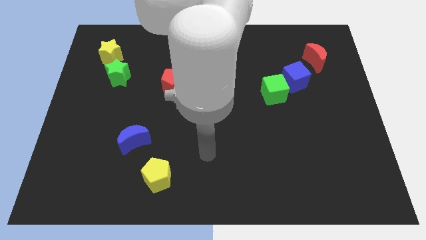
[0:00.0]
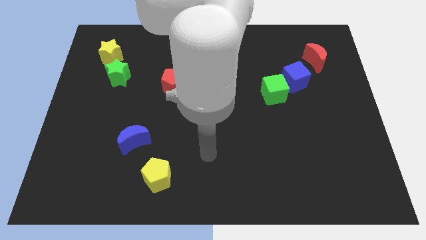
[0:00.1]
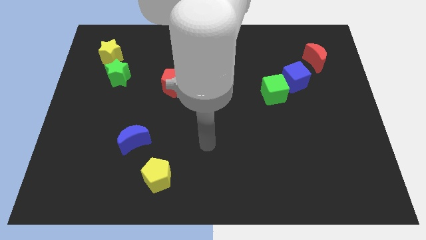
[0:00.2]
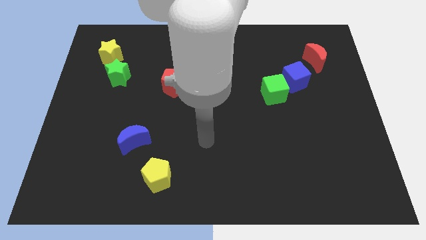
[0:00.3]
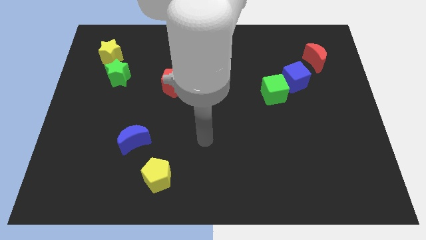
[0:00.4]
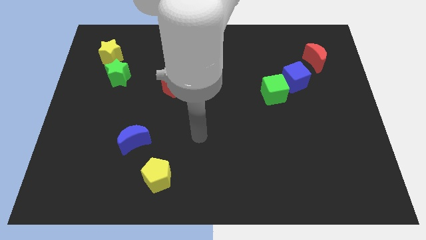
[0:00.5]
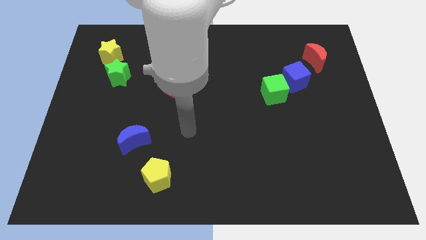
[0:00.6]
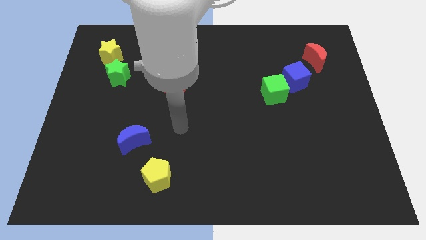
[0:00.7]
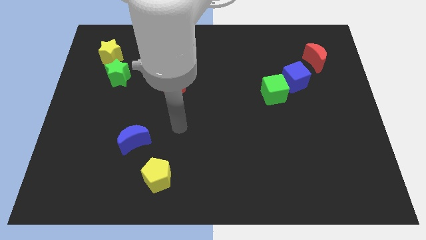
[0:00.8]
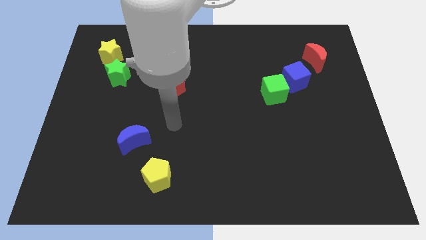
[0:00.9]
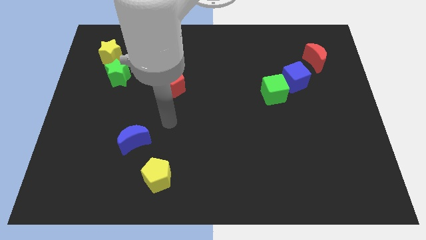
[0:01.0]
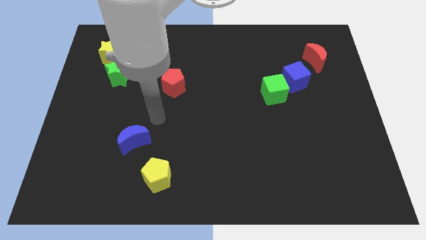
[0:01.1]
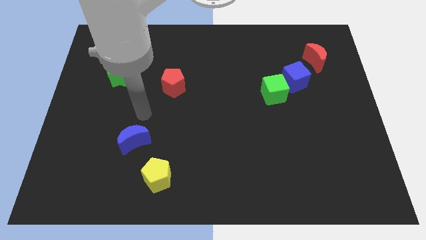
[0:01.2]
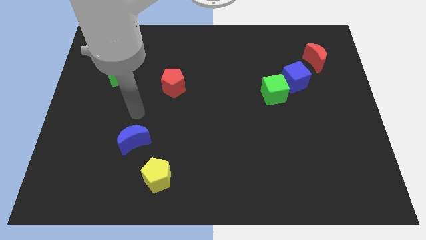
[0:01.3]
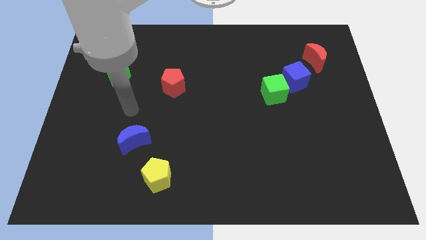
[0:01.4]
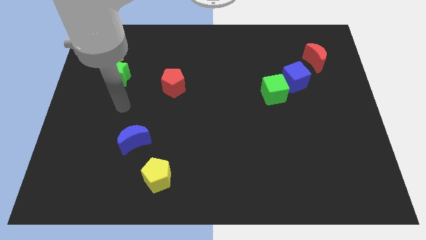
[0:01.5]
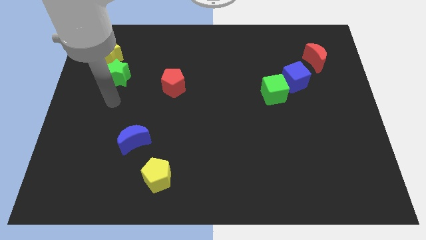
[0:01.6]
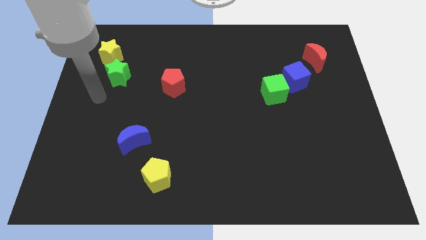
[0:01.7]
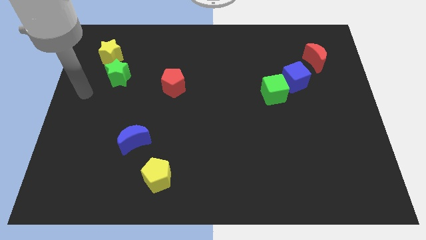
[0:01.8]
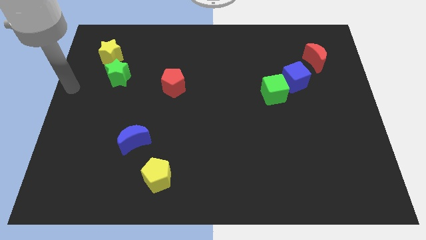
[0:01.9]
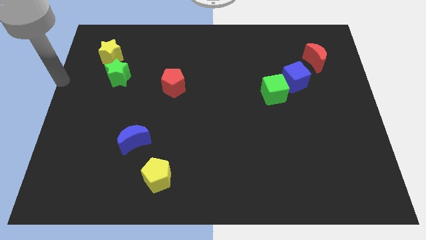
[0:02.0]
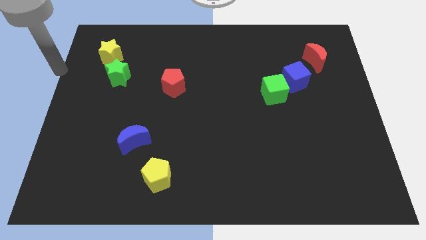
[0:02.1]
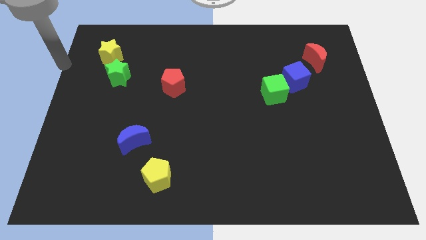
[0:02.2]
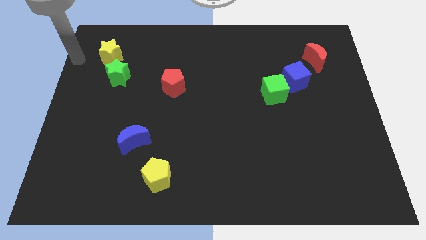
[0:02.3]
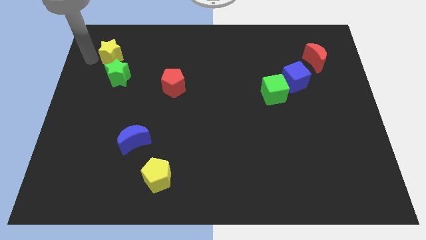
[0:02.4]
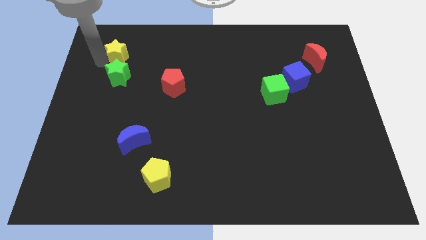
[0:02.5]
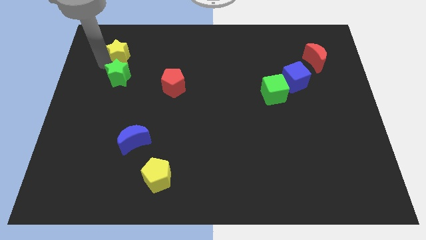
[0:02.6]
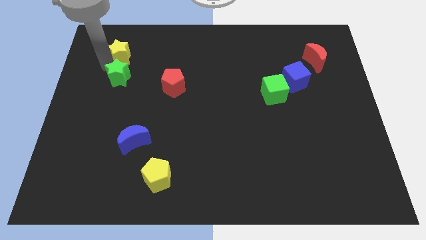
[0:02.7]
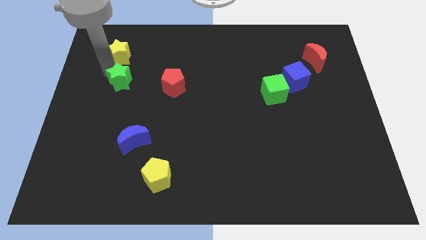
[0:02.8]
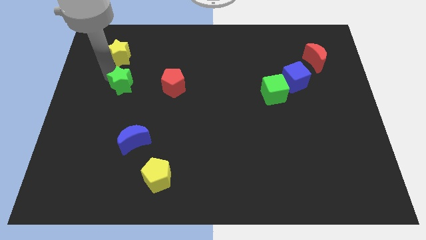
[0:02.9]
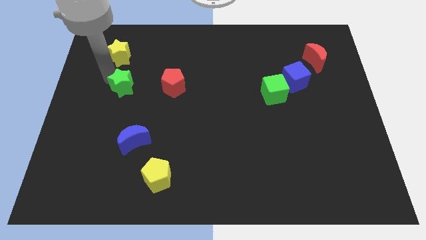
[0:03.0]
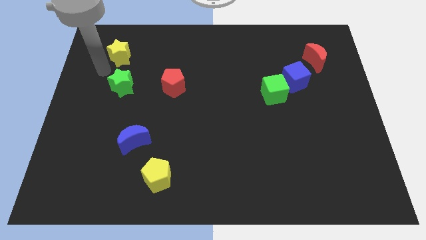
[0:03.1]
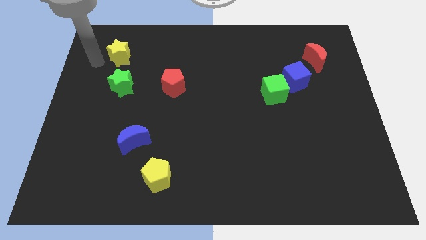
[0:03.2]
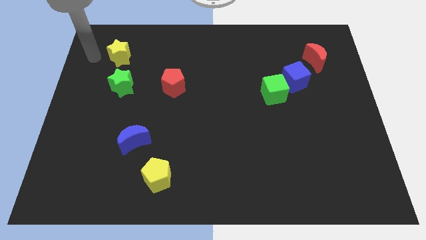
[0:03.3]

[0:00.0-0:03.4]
move the green star to the left side of the red pentagon

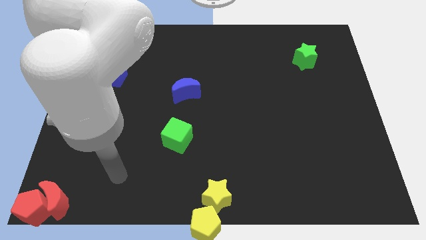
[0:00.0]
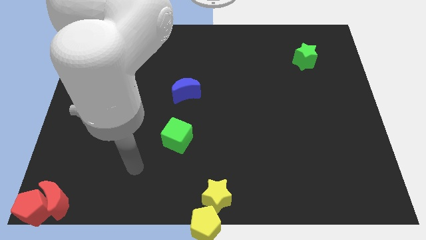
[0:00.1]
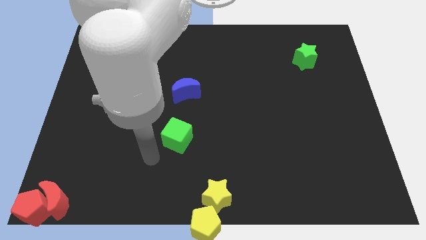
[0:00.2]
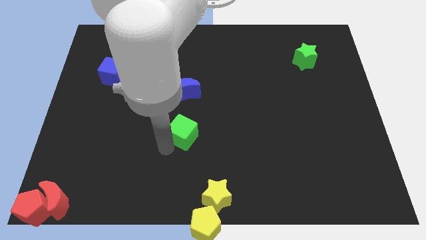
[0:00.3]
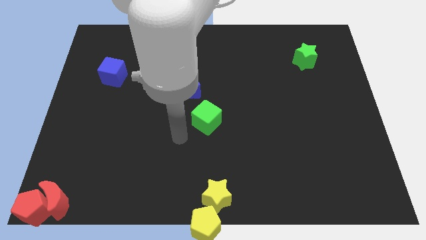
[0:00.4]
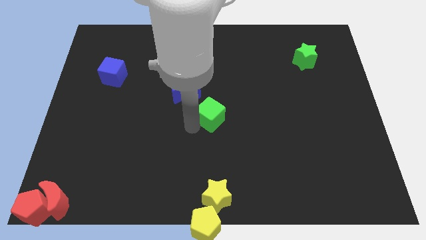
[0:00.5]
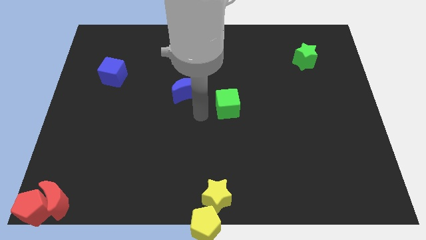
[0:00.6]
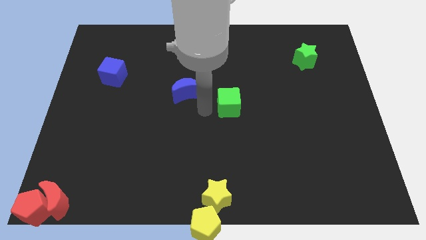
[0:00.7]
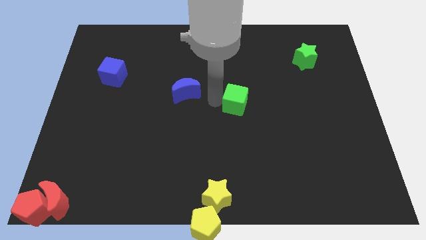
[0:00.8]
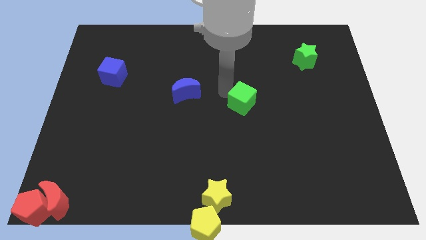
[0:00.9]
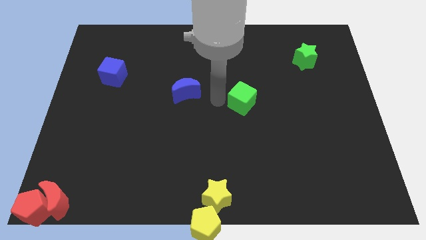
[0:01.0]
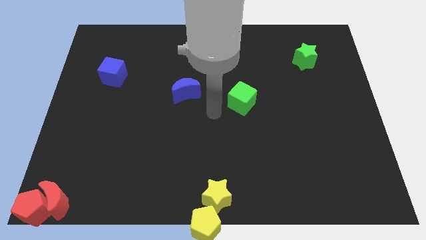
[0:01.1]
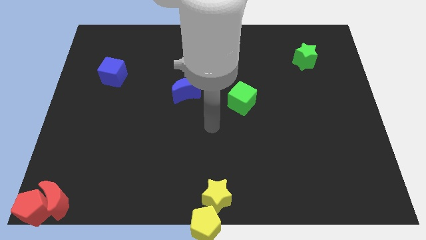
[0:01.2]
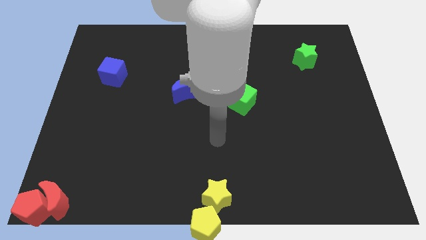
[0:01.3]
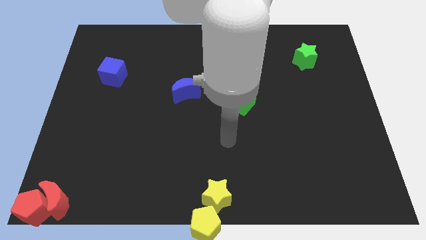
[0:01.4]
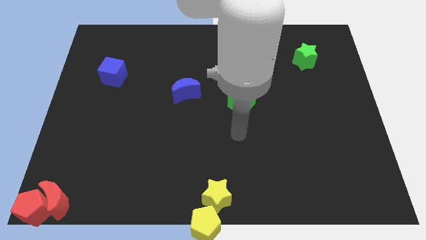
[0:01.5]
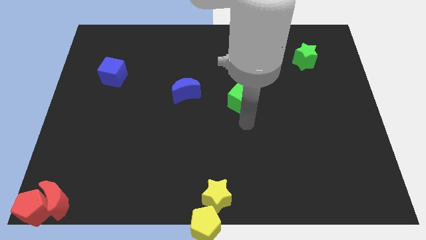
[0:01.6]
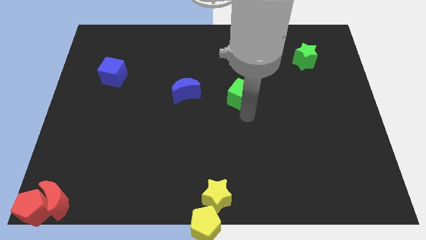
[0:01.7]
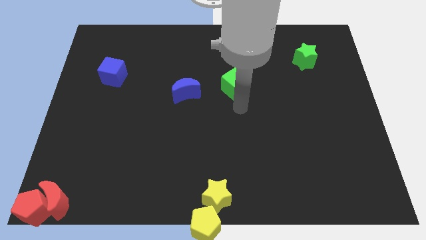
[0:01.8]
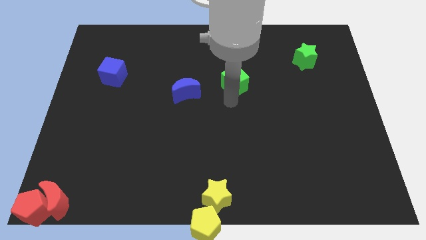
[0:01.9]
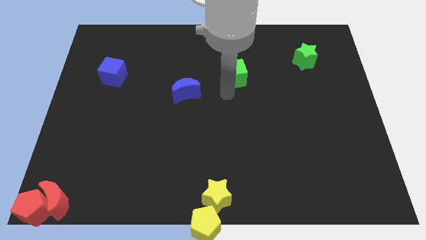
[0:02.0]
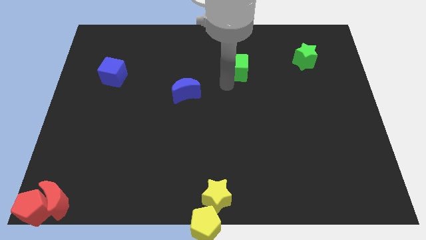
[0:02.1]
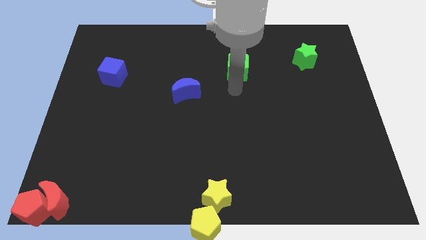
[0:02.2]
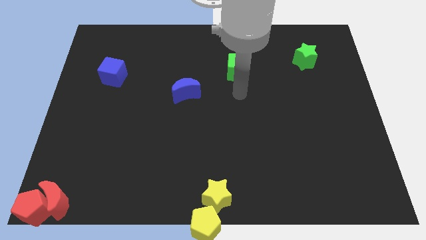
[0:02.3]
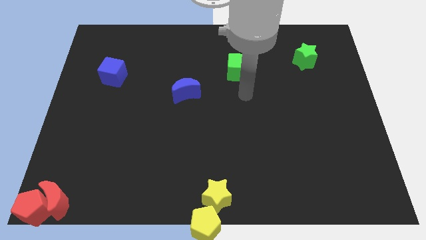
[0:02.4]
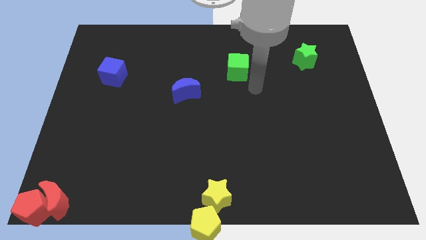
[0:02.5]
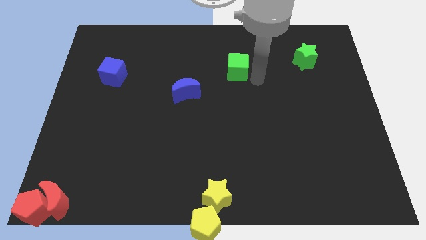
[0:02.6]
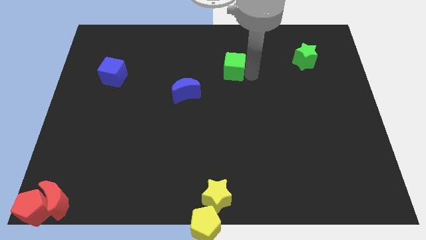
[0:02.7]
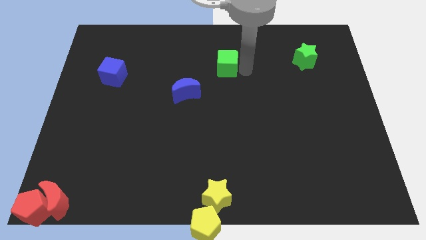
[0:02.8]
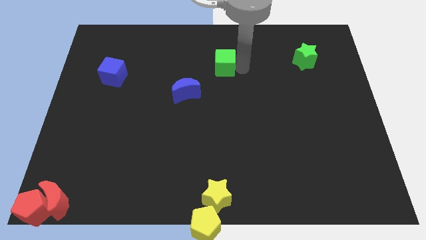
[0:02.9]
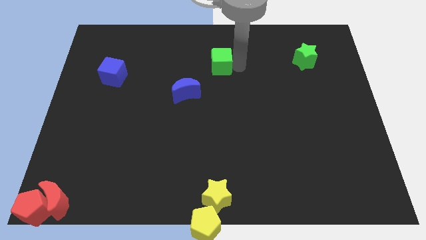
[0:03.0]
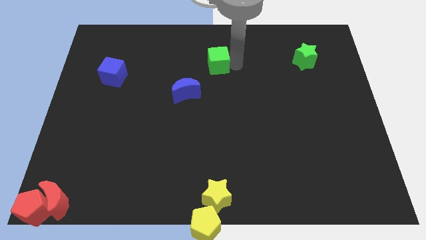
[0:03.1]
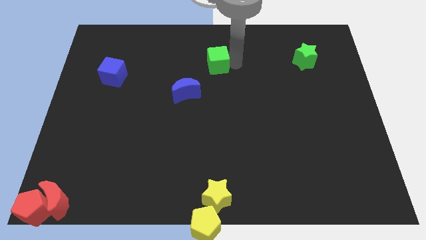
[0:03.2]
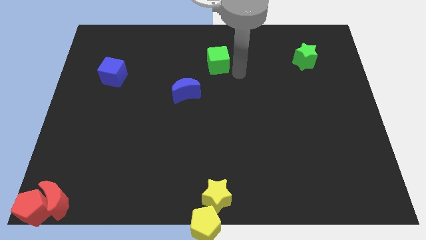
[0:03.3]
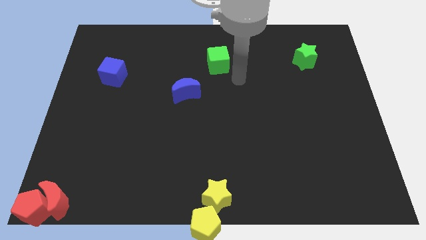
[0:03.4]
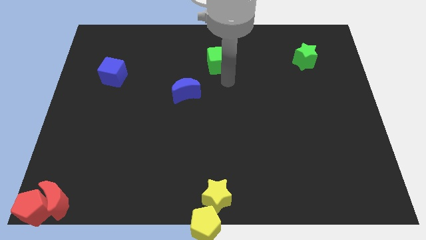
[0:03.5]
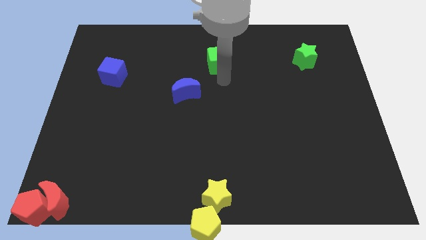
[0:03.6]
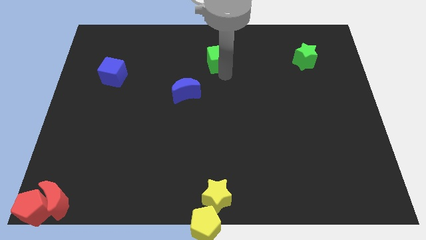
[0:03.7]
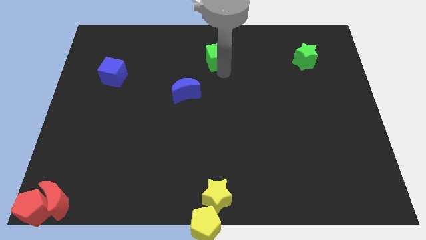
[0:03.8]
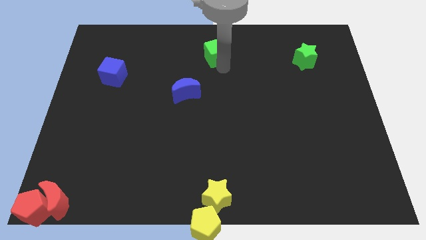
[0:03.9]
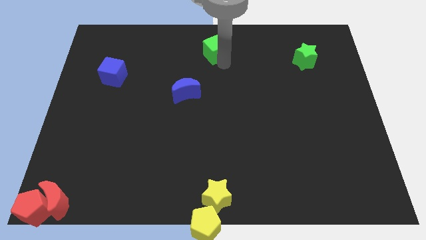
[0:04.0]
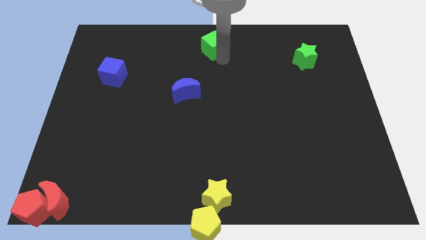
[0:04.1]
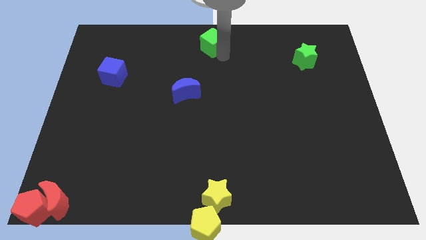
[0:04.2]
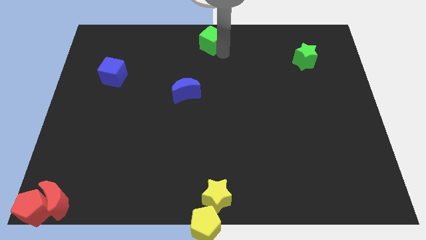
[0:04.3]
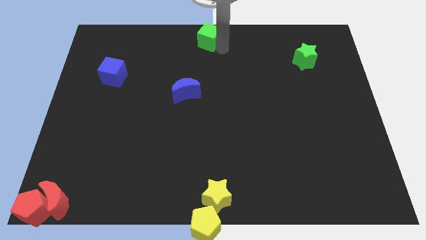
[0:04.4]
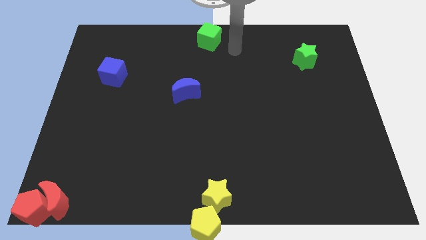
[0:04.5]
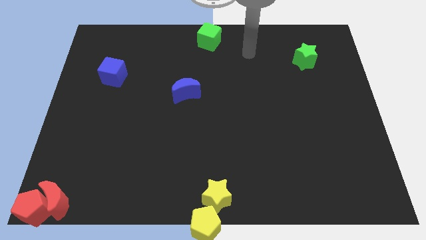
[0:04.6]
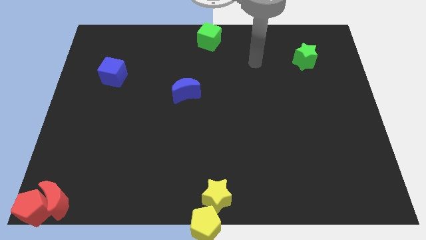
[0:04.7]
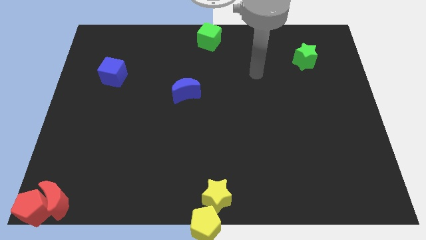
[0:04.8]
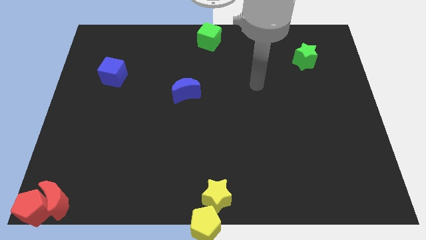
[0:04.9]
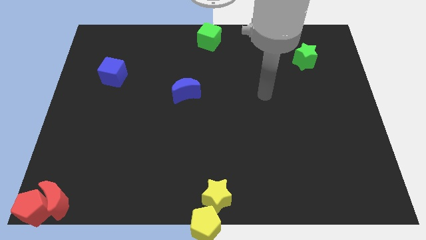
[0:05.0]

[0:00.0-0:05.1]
move green cube to the top center

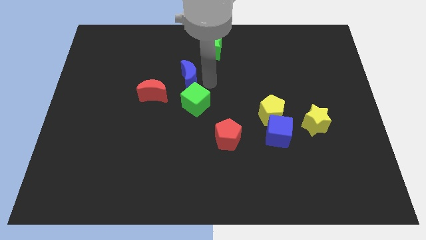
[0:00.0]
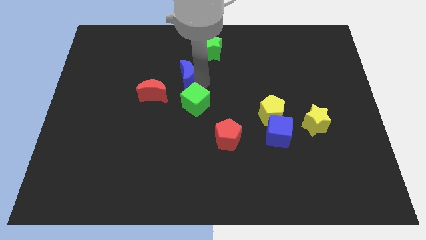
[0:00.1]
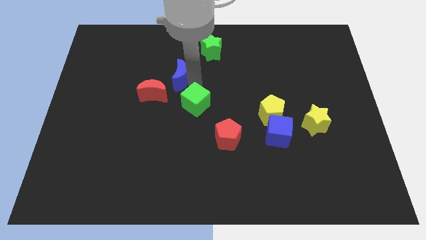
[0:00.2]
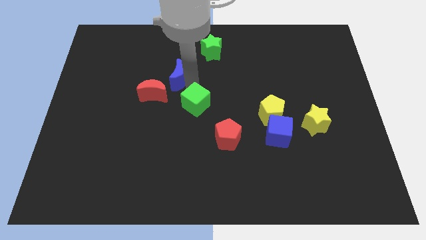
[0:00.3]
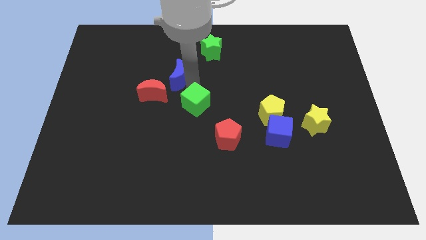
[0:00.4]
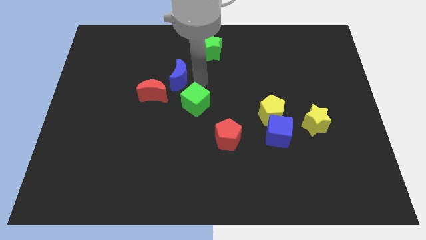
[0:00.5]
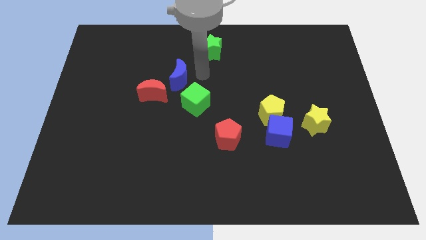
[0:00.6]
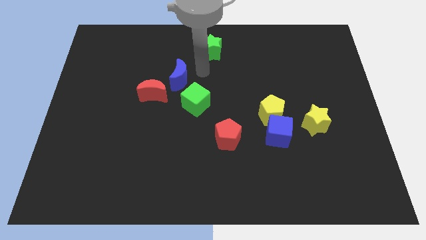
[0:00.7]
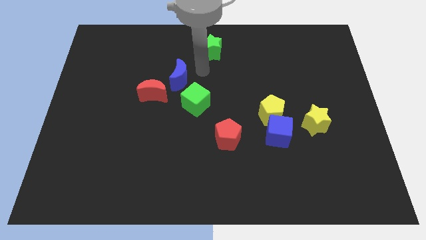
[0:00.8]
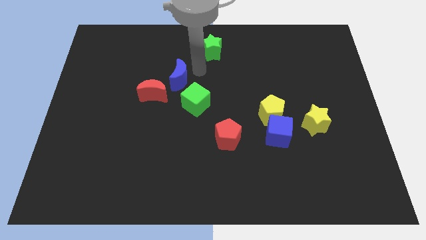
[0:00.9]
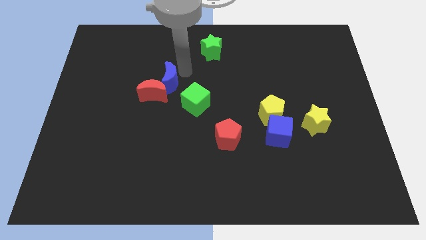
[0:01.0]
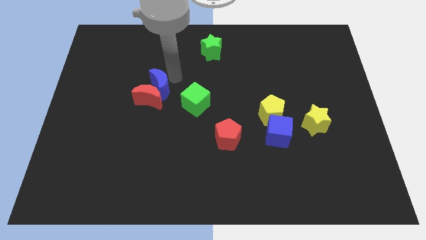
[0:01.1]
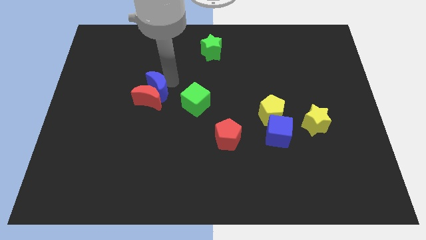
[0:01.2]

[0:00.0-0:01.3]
move the blue moon into the red moon
